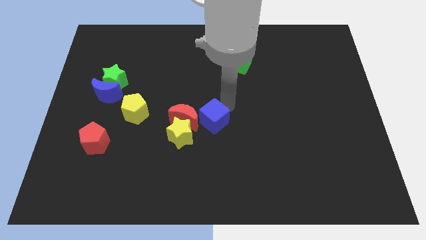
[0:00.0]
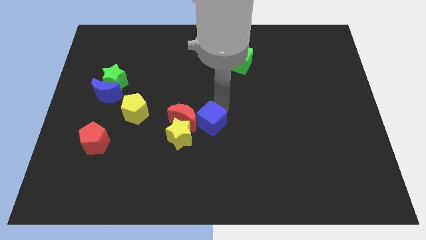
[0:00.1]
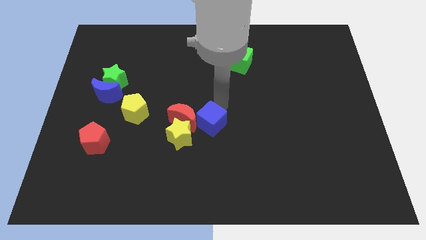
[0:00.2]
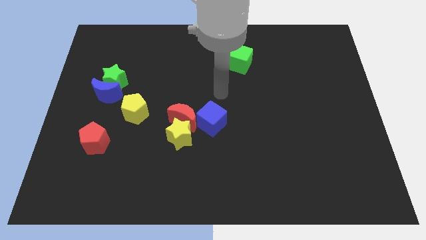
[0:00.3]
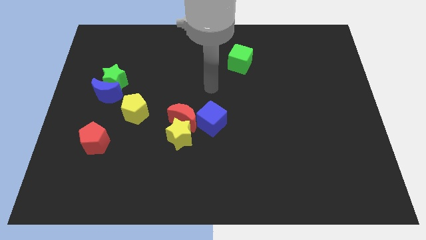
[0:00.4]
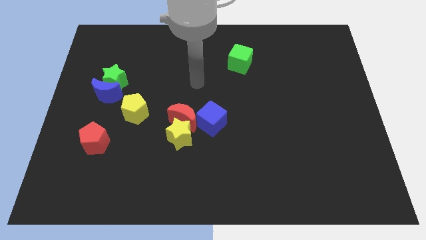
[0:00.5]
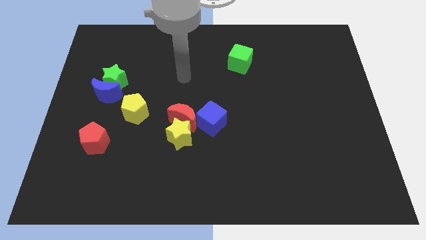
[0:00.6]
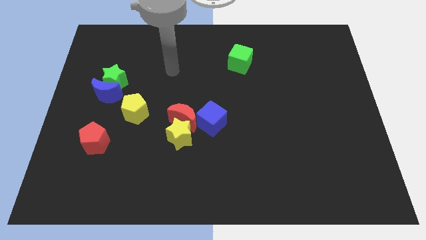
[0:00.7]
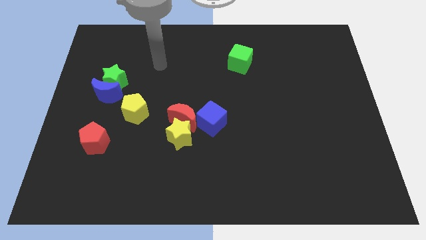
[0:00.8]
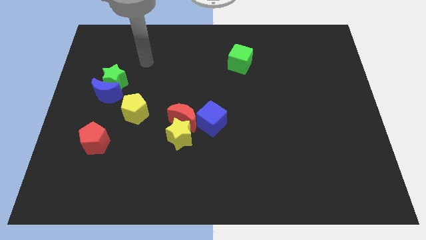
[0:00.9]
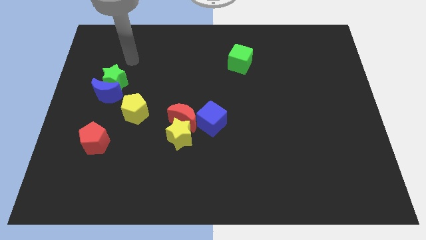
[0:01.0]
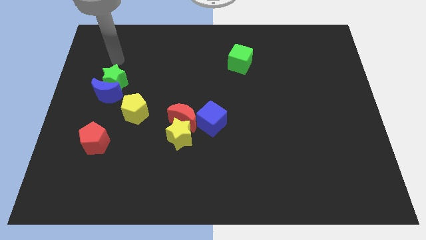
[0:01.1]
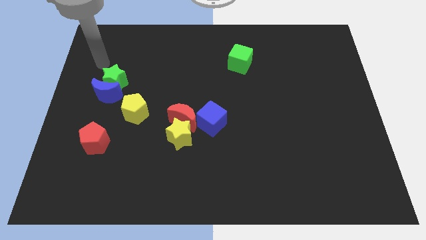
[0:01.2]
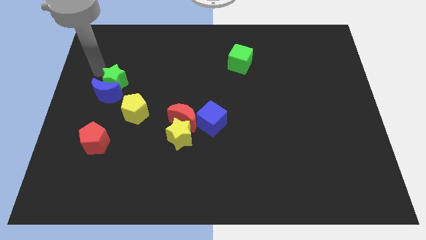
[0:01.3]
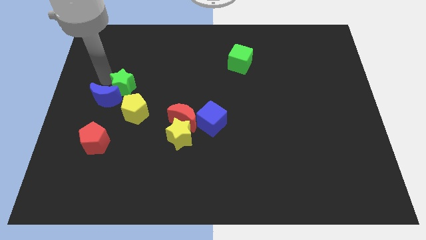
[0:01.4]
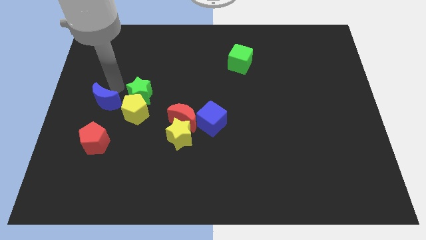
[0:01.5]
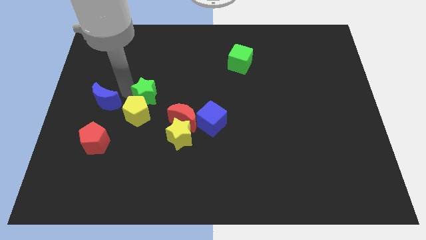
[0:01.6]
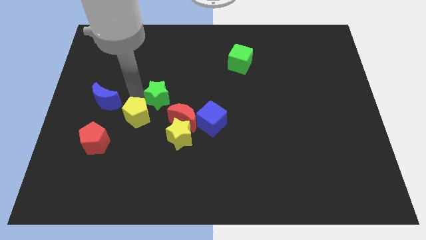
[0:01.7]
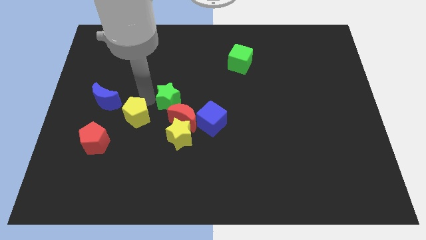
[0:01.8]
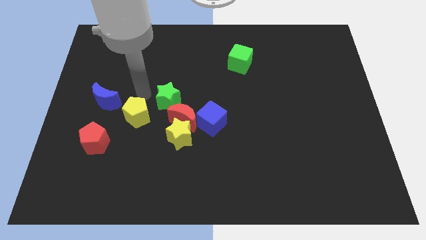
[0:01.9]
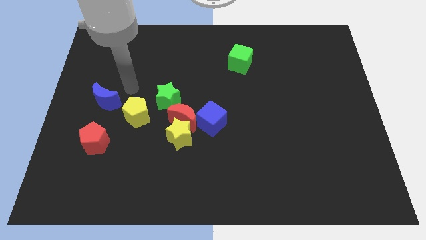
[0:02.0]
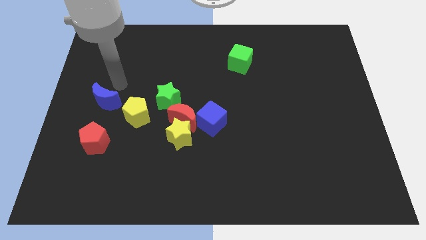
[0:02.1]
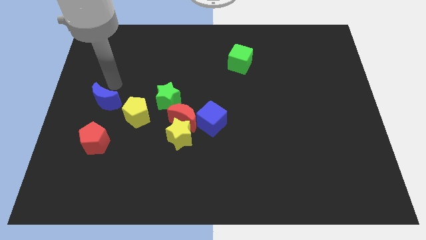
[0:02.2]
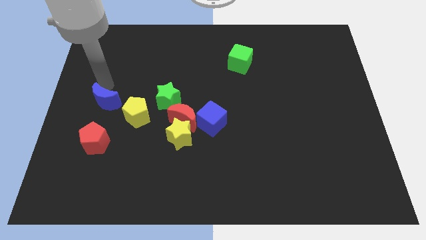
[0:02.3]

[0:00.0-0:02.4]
separate the green star and blue crescent

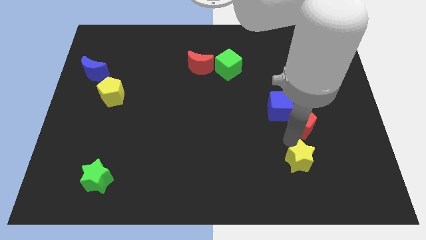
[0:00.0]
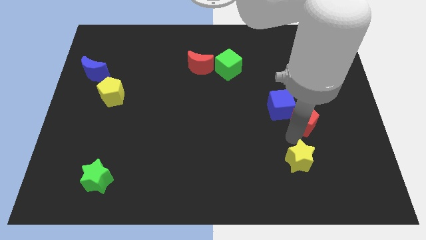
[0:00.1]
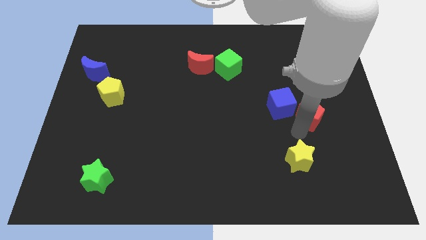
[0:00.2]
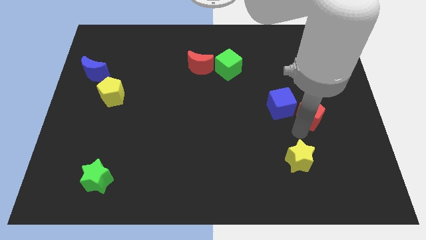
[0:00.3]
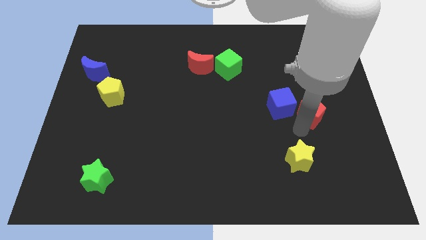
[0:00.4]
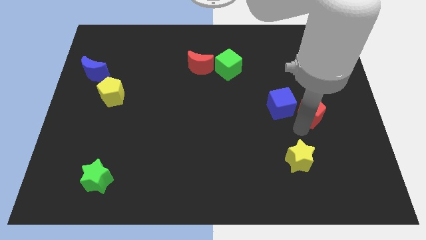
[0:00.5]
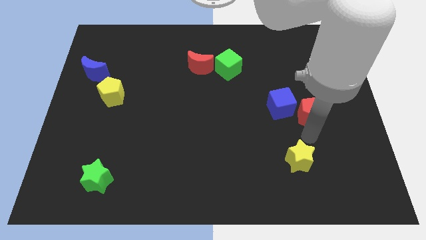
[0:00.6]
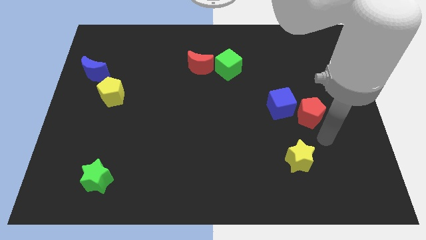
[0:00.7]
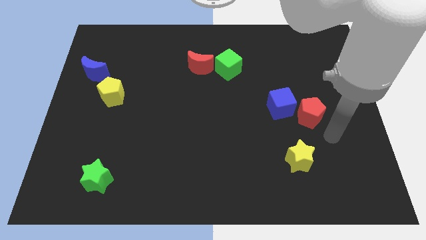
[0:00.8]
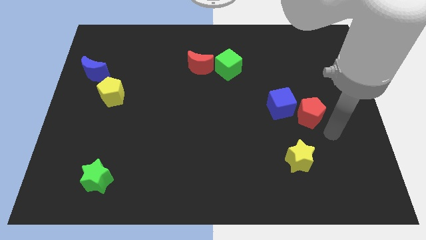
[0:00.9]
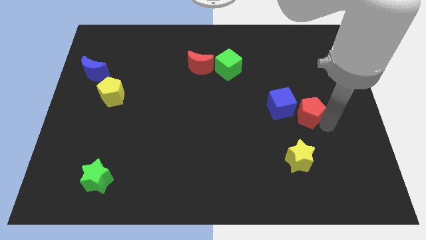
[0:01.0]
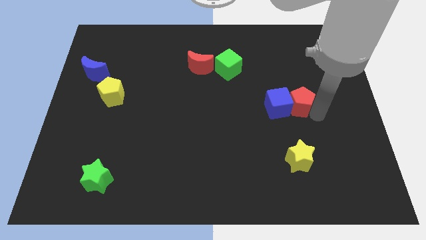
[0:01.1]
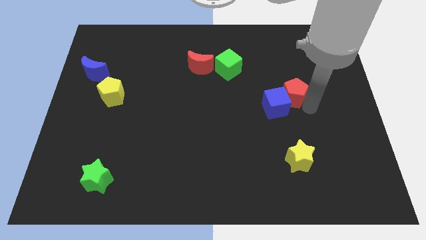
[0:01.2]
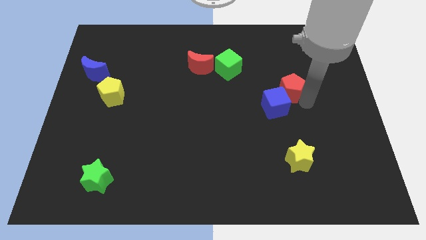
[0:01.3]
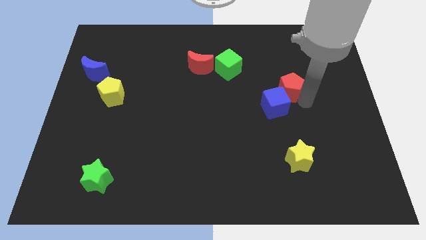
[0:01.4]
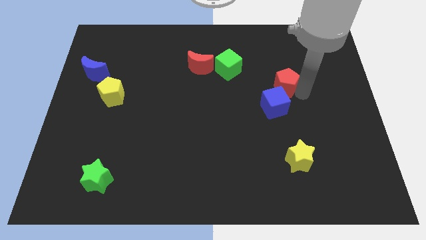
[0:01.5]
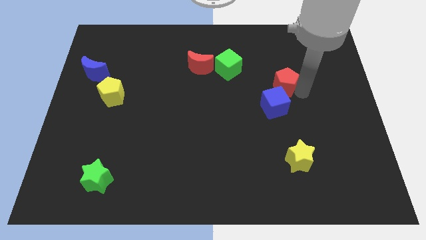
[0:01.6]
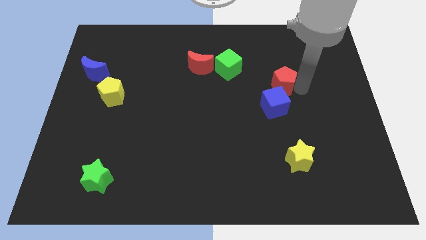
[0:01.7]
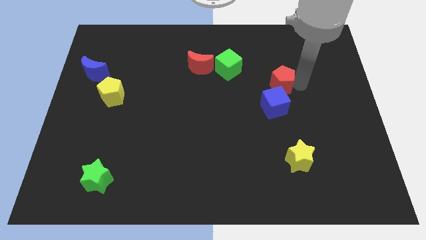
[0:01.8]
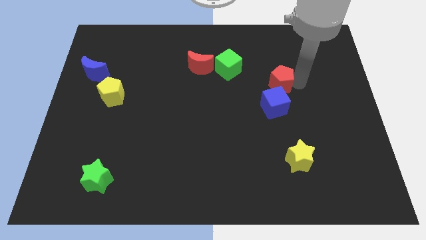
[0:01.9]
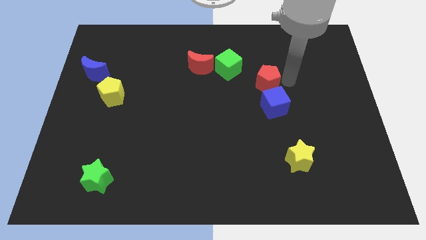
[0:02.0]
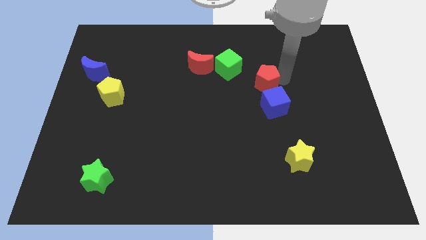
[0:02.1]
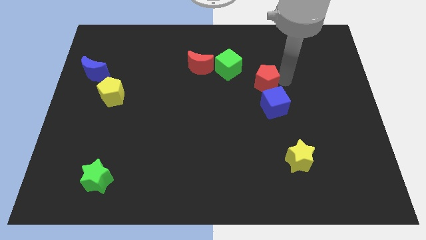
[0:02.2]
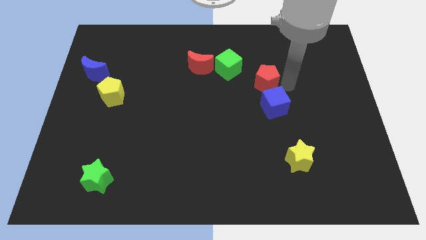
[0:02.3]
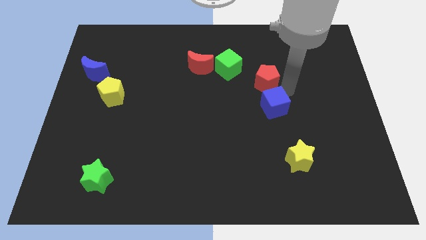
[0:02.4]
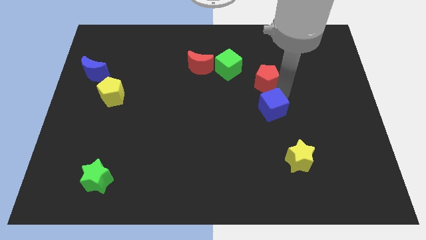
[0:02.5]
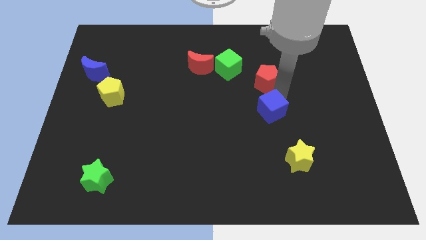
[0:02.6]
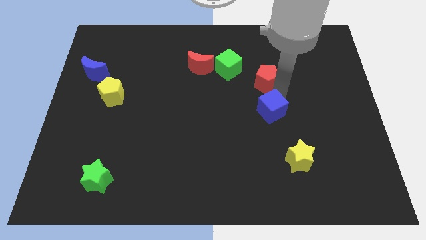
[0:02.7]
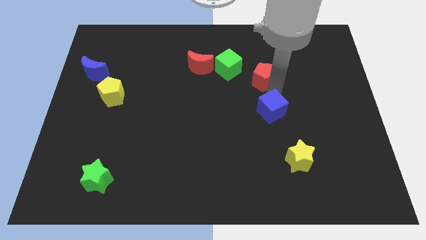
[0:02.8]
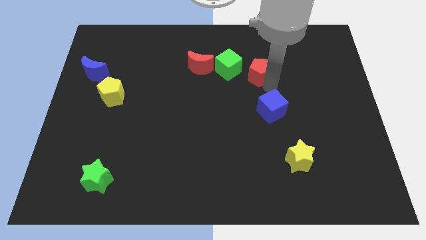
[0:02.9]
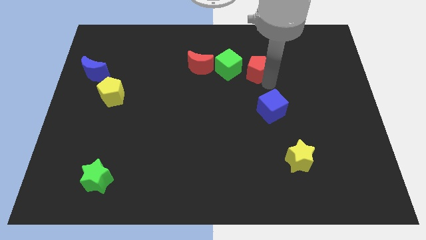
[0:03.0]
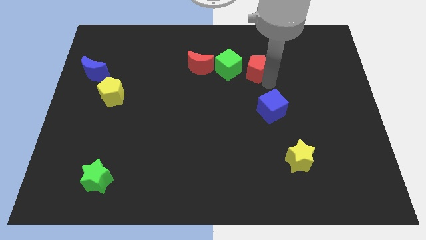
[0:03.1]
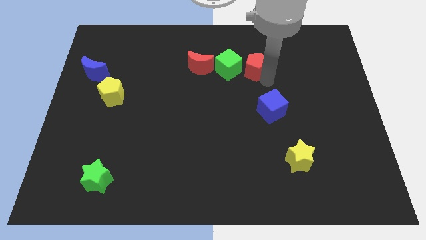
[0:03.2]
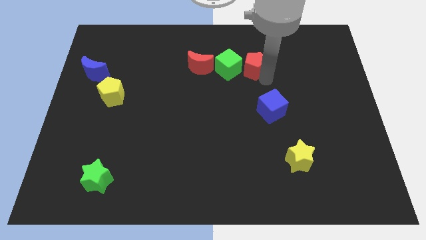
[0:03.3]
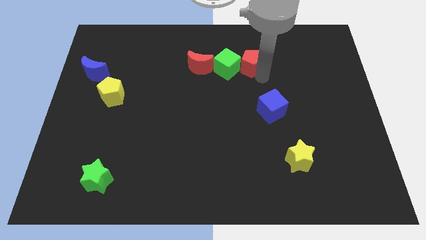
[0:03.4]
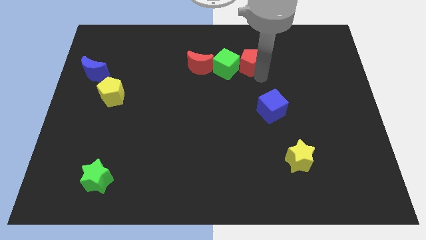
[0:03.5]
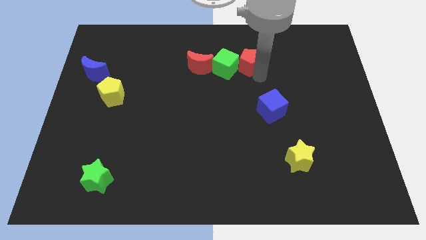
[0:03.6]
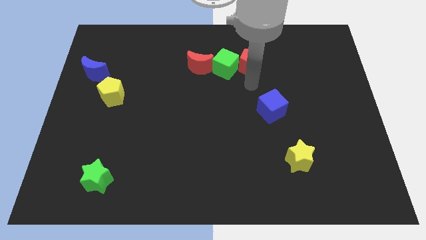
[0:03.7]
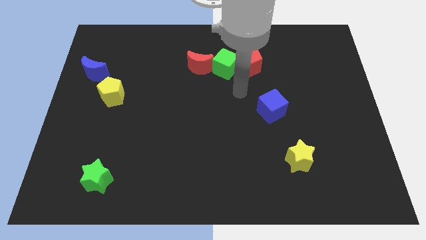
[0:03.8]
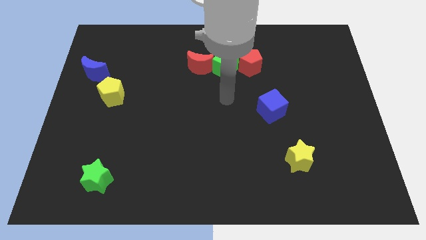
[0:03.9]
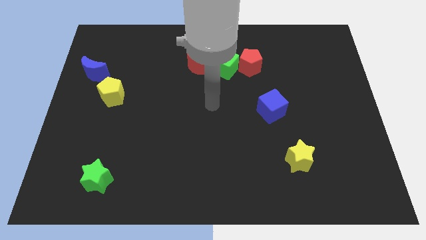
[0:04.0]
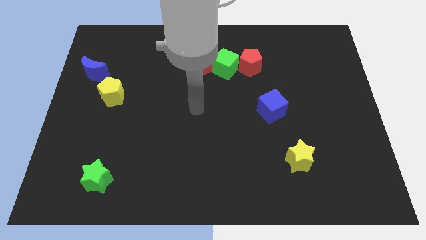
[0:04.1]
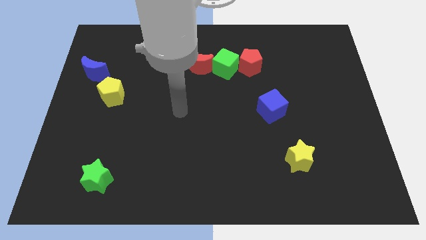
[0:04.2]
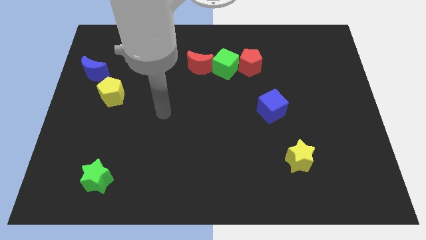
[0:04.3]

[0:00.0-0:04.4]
push the red pentagon right to the green cube

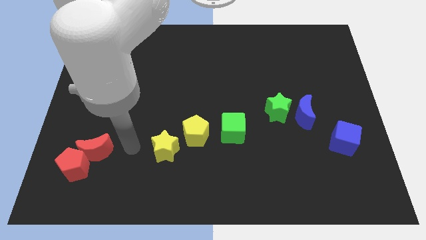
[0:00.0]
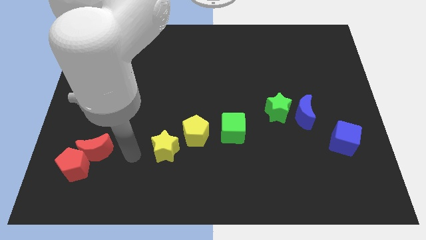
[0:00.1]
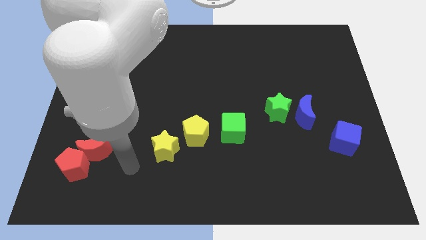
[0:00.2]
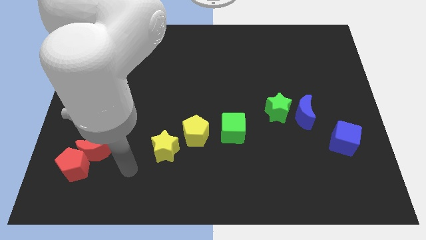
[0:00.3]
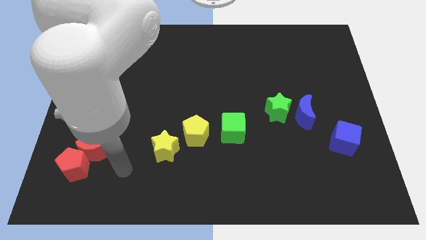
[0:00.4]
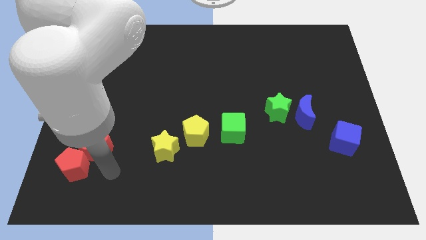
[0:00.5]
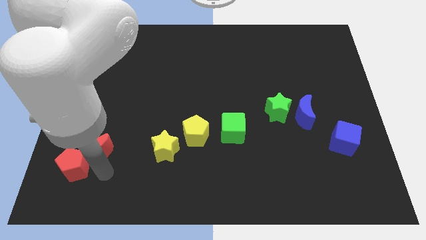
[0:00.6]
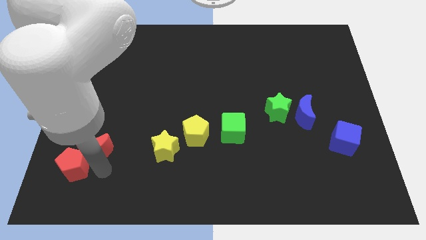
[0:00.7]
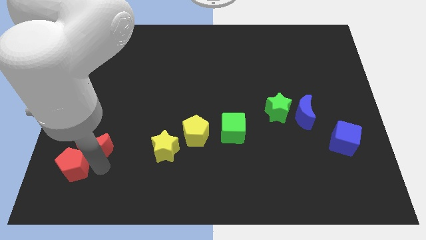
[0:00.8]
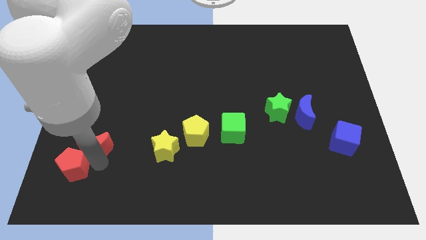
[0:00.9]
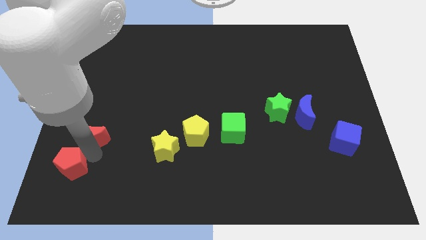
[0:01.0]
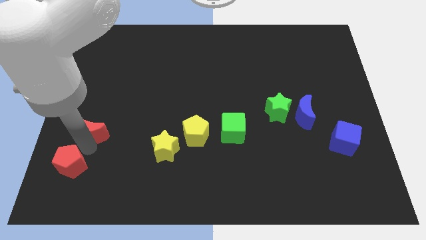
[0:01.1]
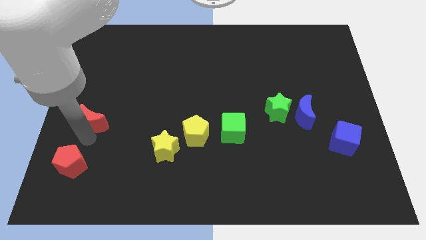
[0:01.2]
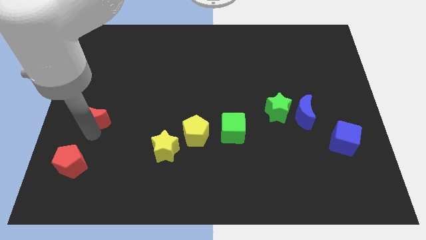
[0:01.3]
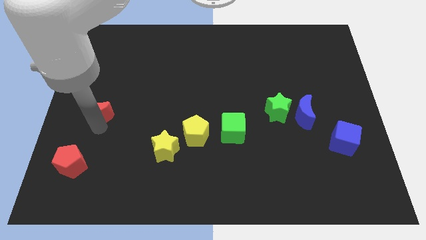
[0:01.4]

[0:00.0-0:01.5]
separate red moon from the red pentagon

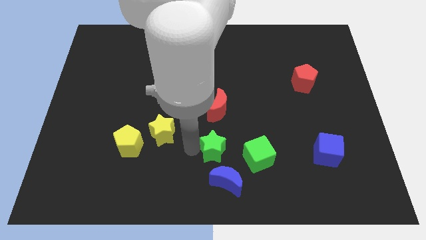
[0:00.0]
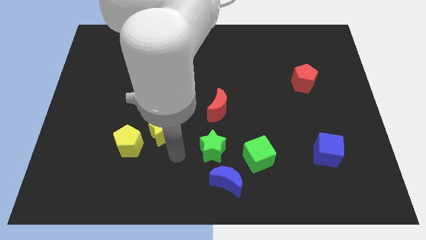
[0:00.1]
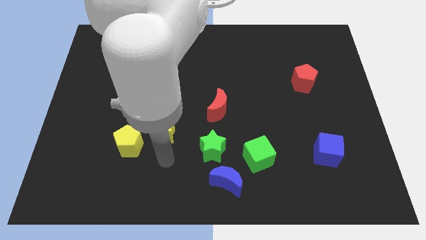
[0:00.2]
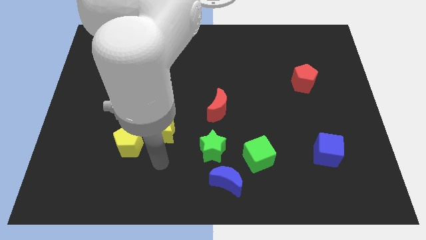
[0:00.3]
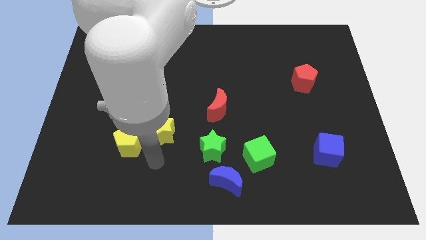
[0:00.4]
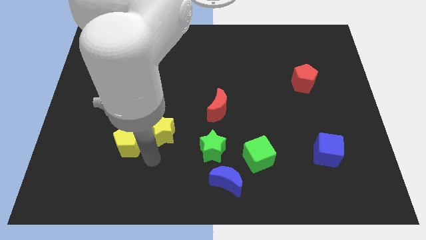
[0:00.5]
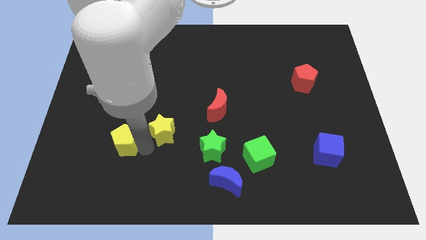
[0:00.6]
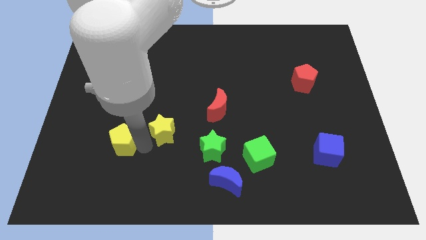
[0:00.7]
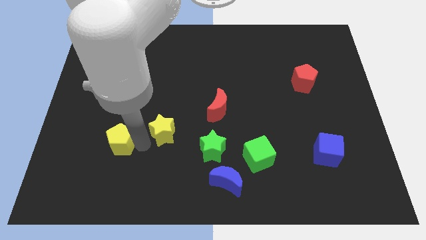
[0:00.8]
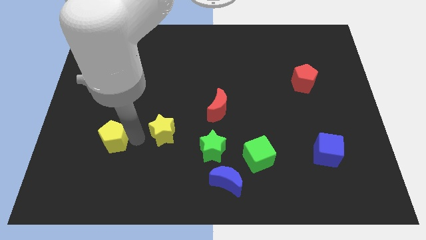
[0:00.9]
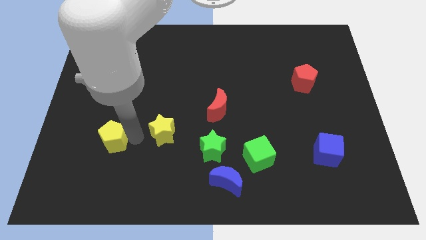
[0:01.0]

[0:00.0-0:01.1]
push the yellow pentagon slightly to the left
